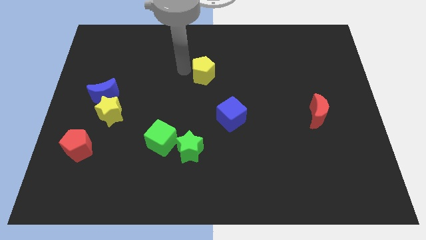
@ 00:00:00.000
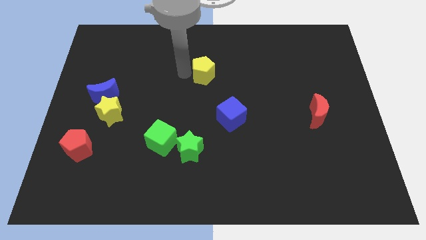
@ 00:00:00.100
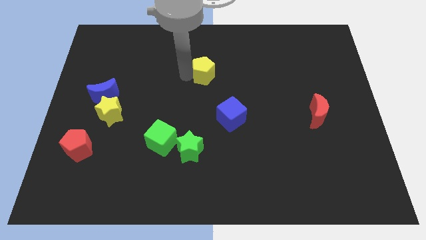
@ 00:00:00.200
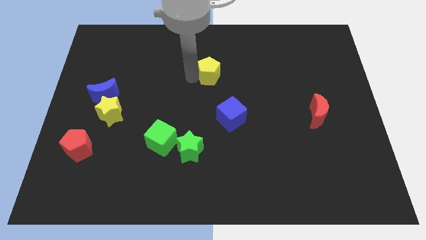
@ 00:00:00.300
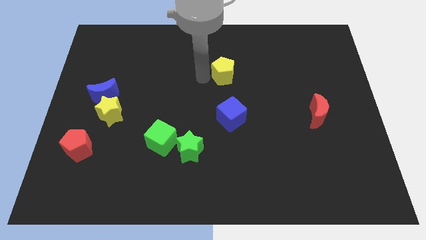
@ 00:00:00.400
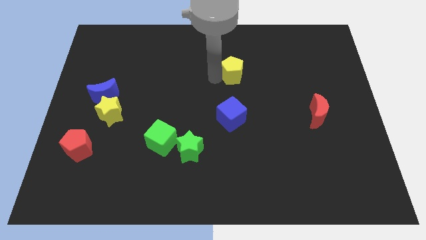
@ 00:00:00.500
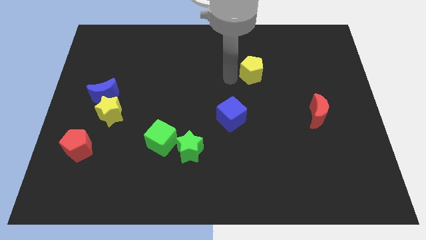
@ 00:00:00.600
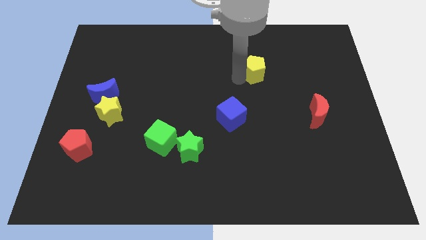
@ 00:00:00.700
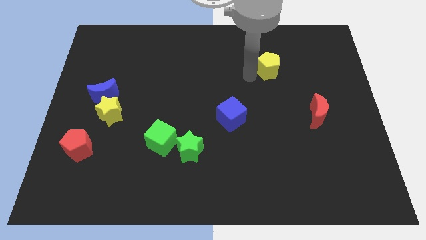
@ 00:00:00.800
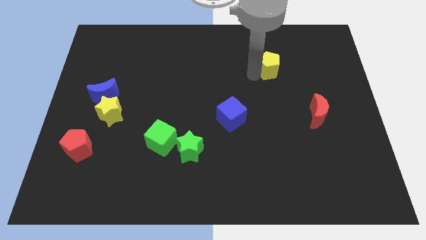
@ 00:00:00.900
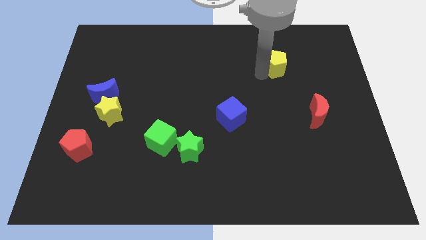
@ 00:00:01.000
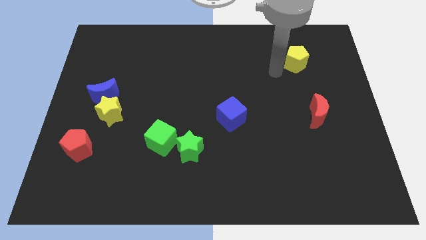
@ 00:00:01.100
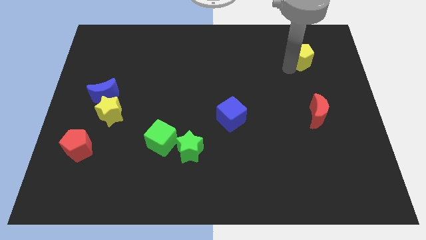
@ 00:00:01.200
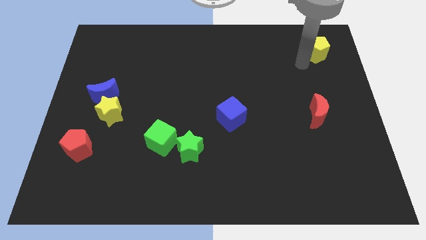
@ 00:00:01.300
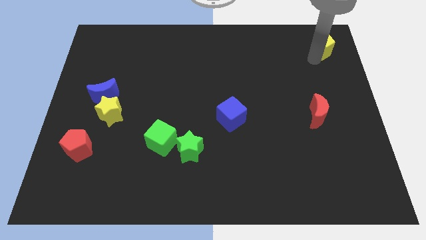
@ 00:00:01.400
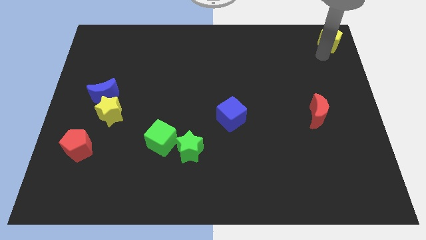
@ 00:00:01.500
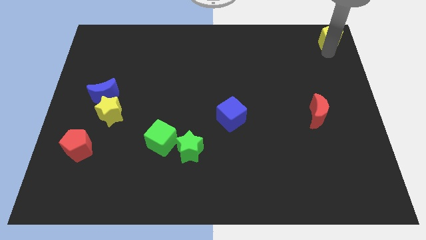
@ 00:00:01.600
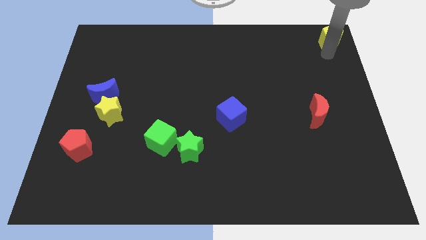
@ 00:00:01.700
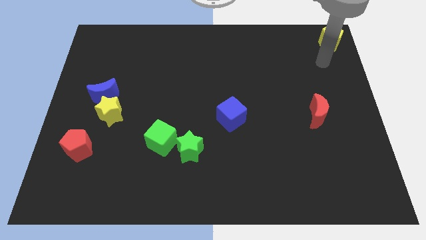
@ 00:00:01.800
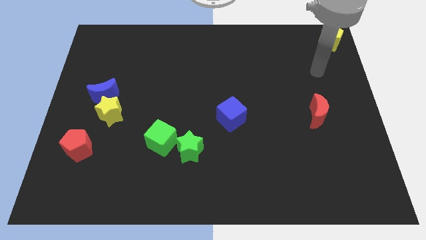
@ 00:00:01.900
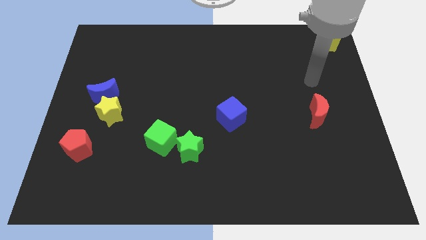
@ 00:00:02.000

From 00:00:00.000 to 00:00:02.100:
push yellow pentagon to the top right corner

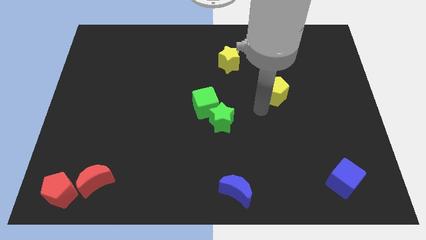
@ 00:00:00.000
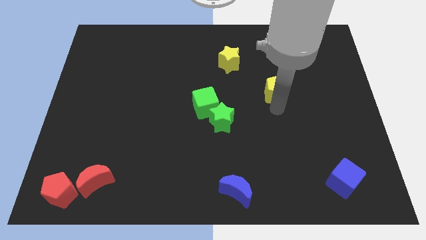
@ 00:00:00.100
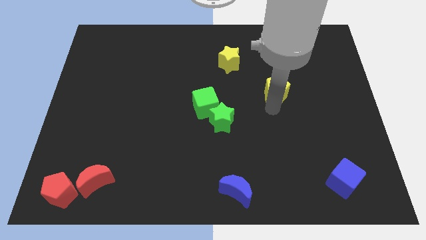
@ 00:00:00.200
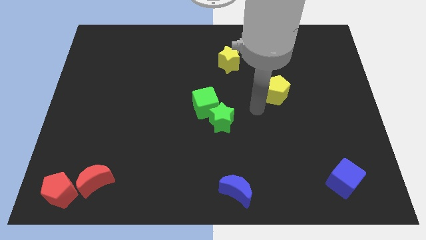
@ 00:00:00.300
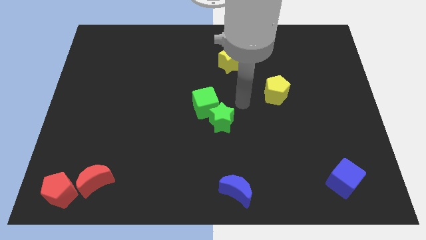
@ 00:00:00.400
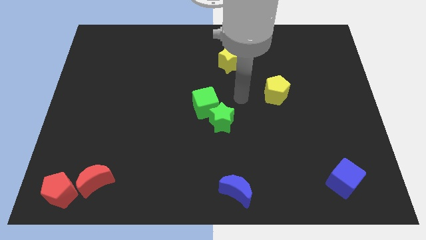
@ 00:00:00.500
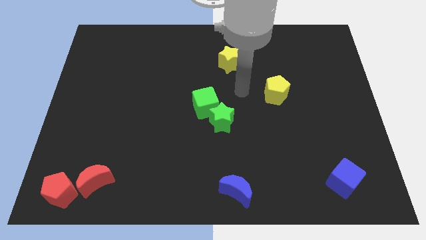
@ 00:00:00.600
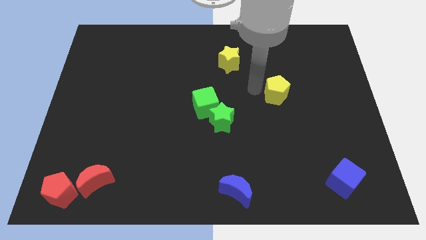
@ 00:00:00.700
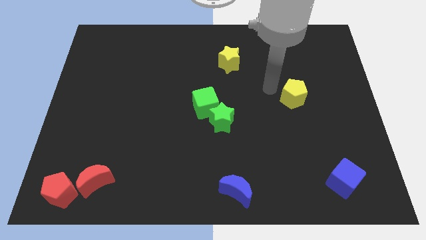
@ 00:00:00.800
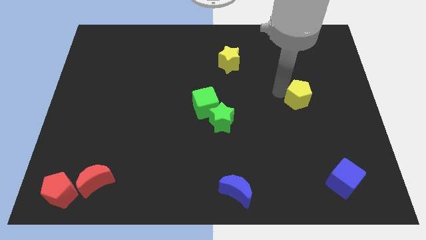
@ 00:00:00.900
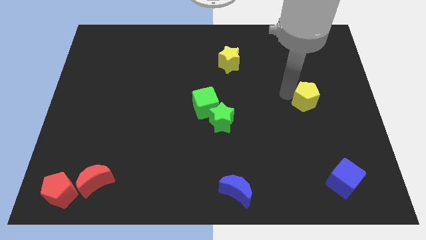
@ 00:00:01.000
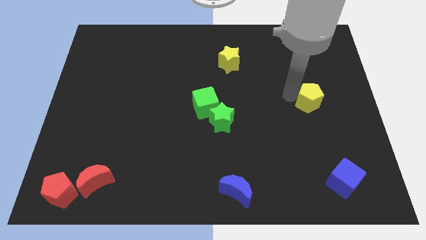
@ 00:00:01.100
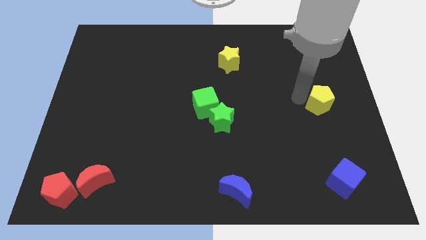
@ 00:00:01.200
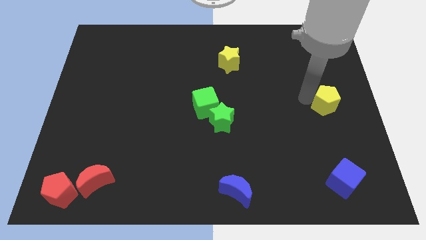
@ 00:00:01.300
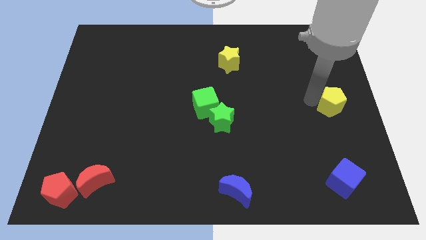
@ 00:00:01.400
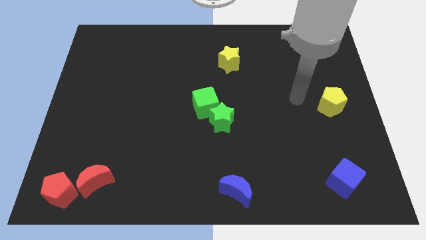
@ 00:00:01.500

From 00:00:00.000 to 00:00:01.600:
put the yellow pentagon vertically above the top side of the blue cube

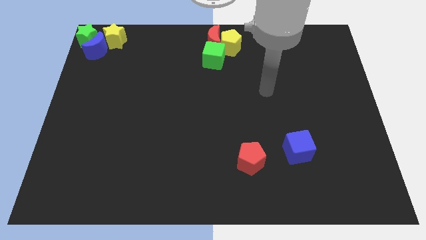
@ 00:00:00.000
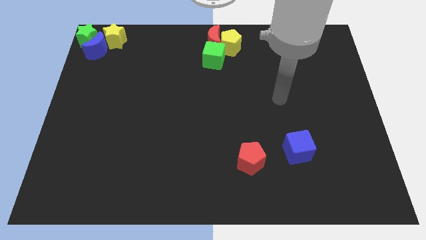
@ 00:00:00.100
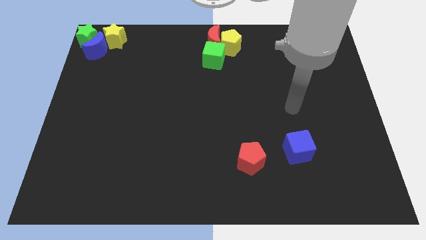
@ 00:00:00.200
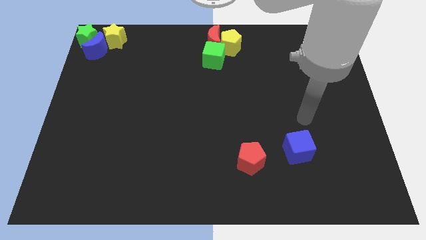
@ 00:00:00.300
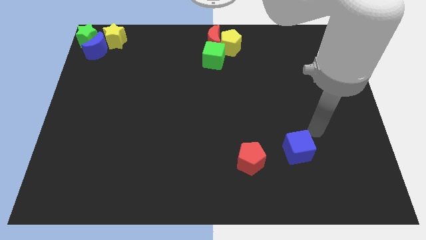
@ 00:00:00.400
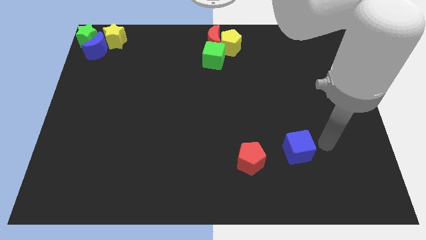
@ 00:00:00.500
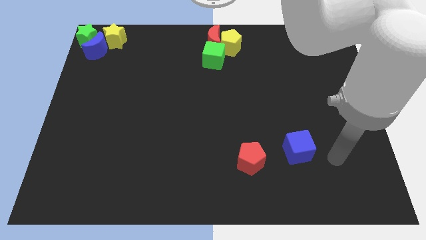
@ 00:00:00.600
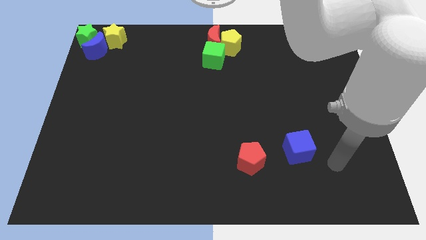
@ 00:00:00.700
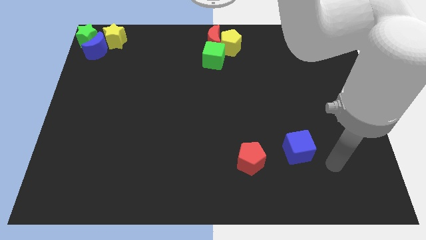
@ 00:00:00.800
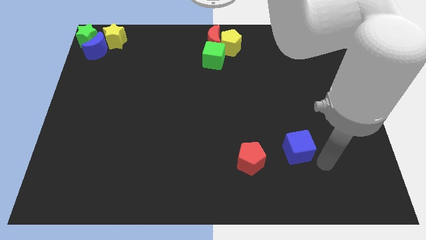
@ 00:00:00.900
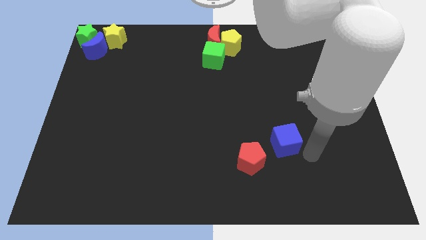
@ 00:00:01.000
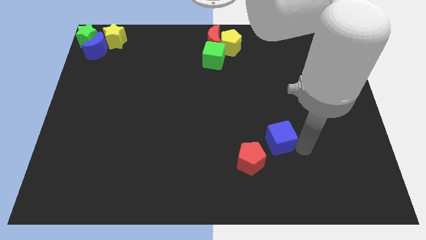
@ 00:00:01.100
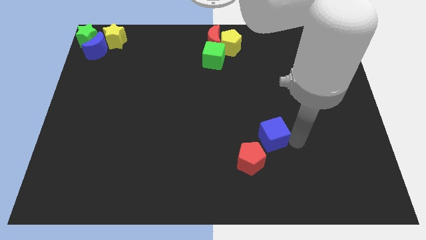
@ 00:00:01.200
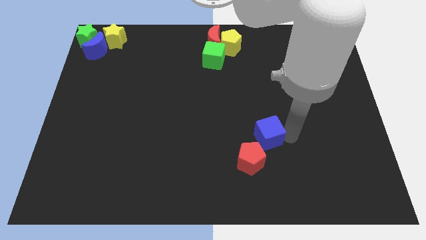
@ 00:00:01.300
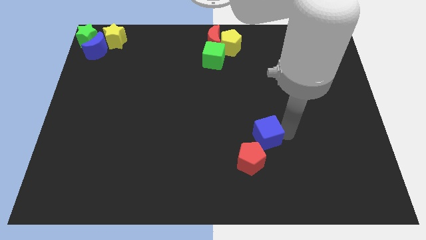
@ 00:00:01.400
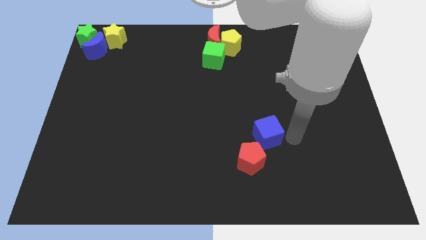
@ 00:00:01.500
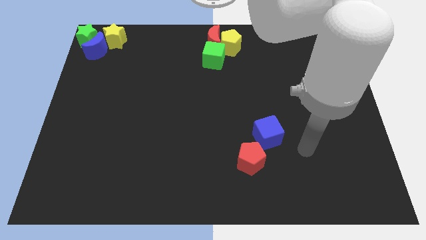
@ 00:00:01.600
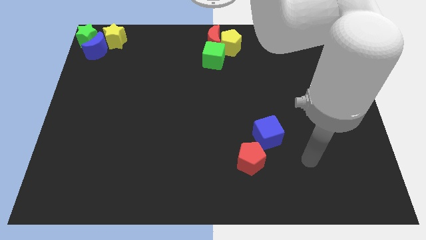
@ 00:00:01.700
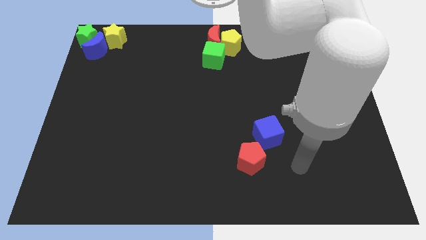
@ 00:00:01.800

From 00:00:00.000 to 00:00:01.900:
place blue cube near red pentagon

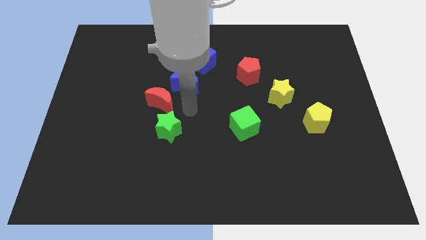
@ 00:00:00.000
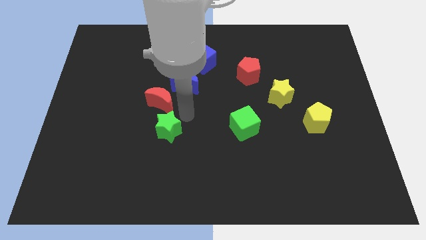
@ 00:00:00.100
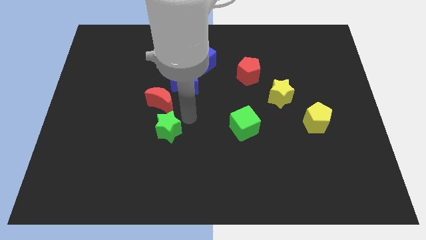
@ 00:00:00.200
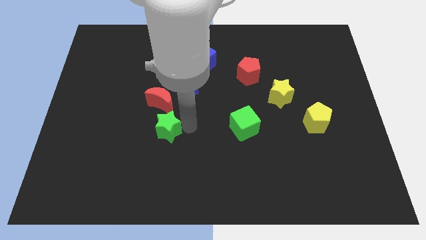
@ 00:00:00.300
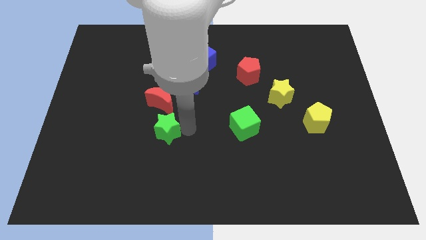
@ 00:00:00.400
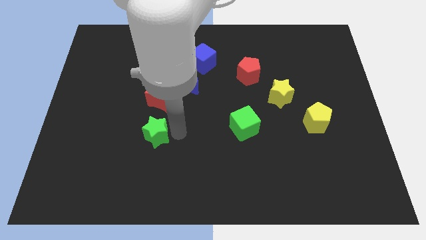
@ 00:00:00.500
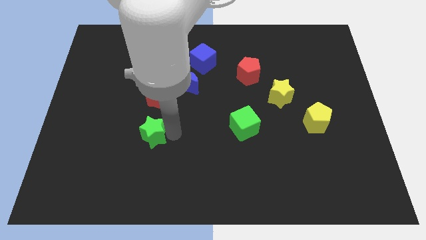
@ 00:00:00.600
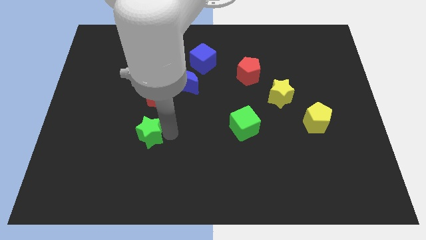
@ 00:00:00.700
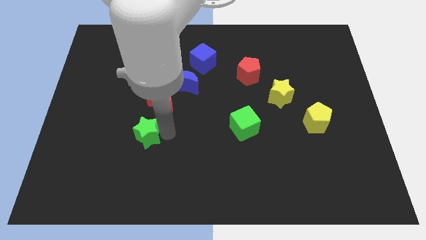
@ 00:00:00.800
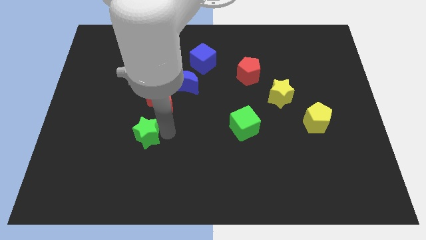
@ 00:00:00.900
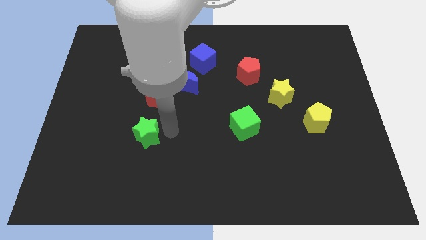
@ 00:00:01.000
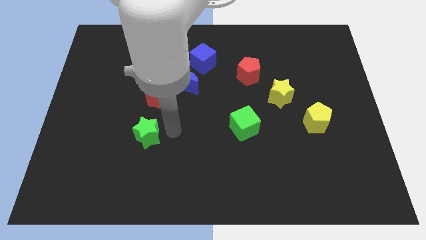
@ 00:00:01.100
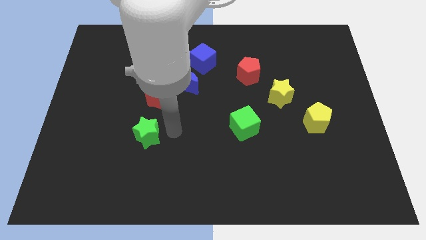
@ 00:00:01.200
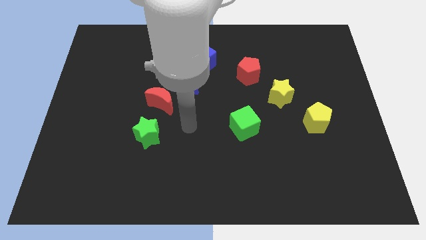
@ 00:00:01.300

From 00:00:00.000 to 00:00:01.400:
push the green star to the bottom of the red crescent

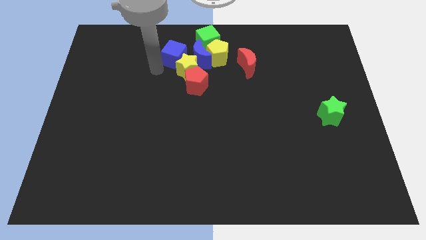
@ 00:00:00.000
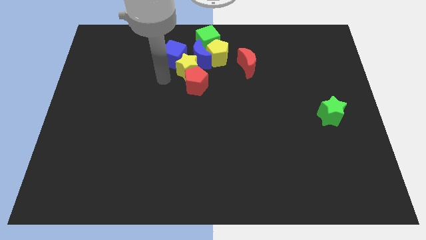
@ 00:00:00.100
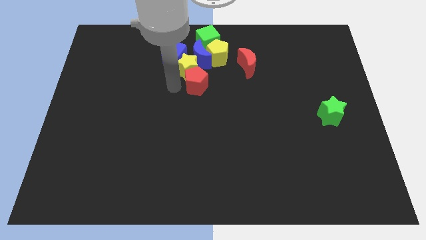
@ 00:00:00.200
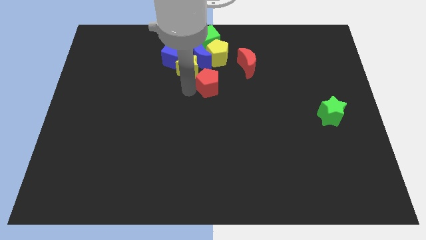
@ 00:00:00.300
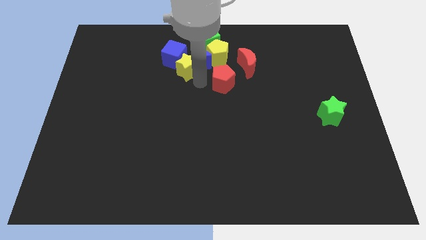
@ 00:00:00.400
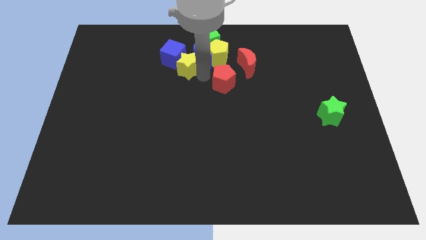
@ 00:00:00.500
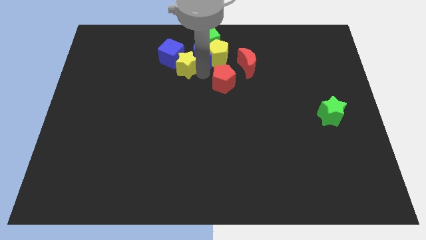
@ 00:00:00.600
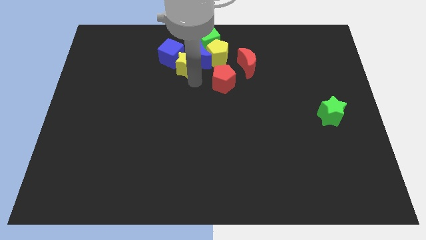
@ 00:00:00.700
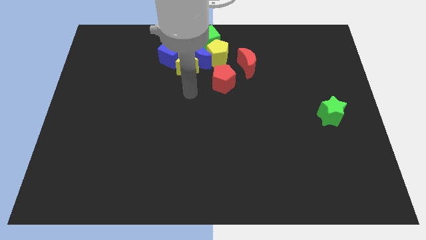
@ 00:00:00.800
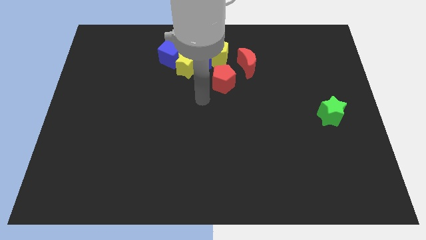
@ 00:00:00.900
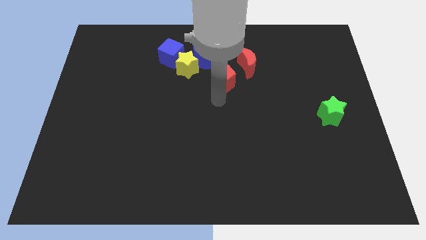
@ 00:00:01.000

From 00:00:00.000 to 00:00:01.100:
move the red pentagon below the yellow pentagon

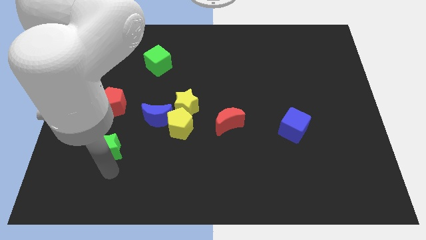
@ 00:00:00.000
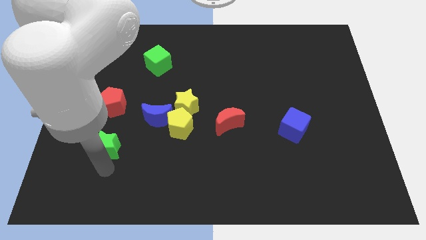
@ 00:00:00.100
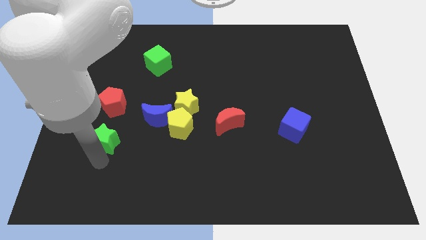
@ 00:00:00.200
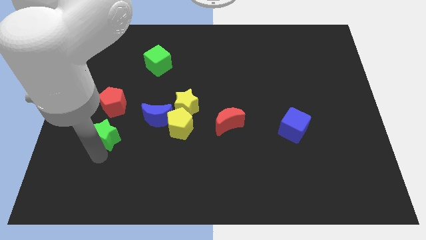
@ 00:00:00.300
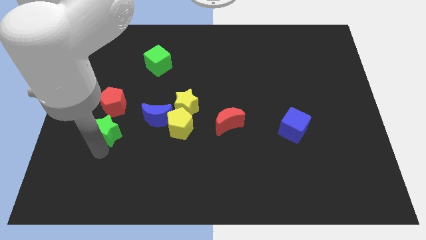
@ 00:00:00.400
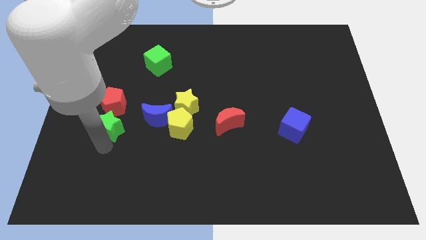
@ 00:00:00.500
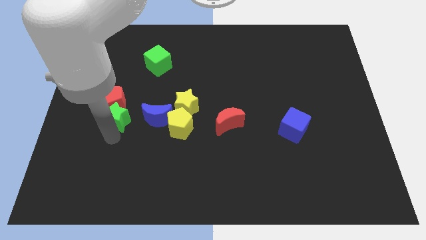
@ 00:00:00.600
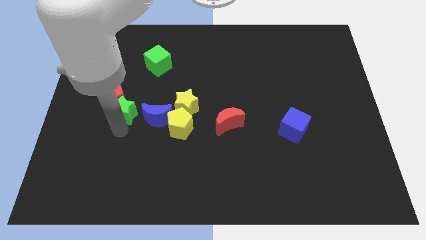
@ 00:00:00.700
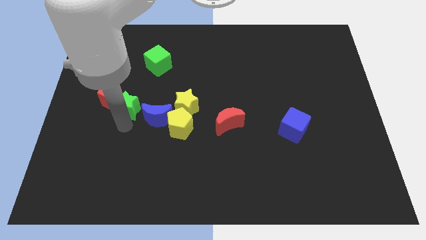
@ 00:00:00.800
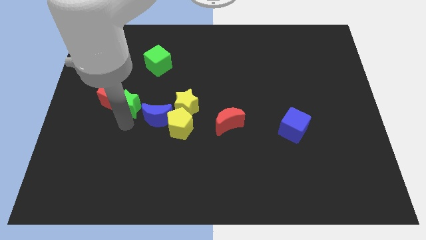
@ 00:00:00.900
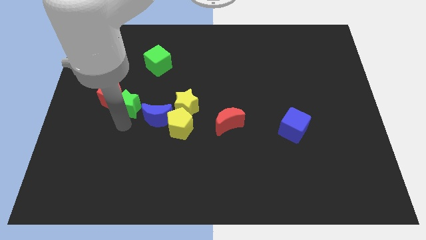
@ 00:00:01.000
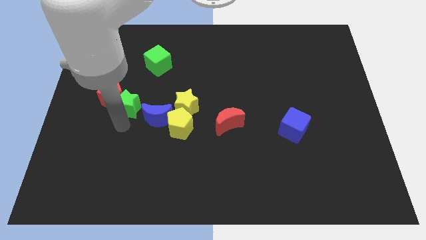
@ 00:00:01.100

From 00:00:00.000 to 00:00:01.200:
push the green star to the right of the red pentagon
